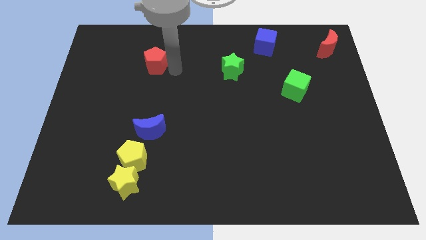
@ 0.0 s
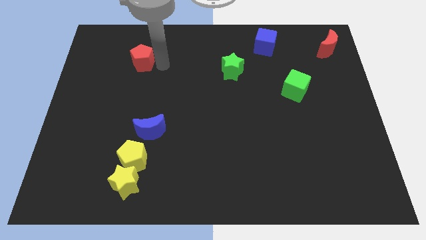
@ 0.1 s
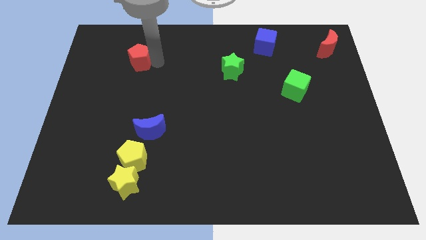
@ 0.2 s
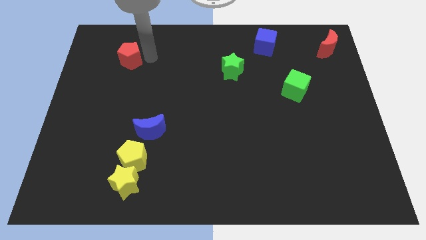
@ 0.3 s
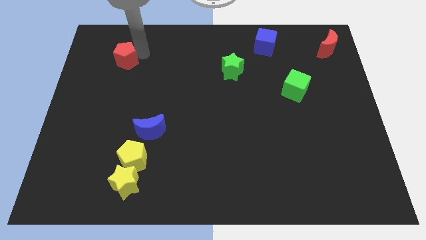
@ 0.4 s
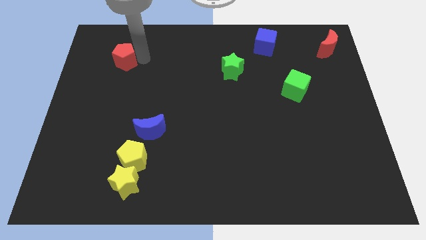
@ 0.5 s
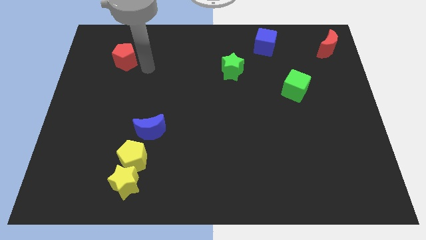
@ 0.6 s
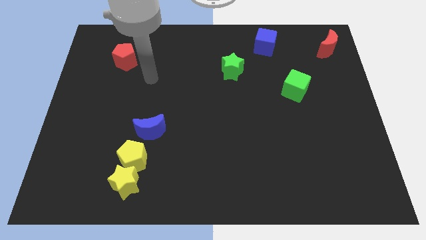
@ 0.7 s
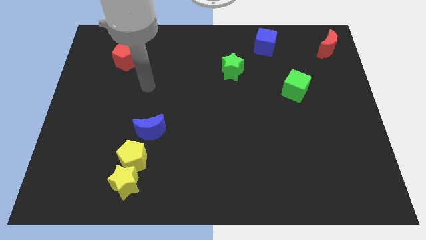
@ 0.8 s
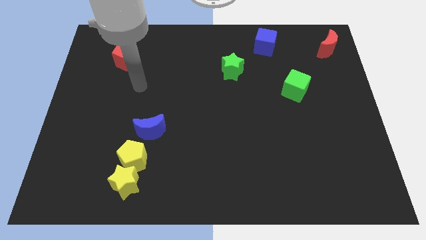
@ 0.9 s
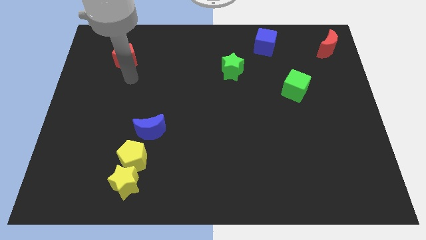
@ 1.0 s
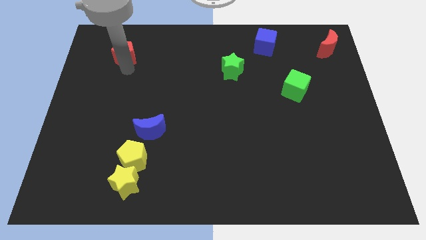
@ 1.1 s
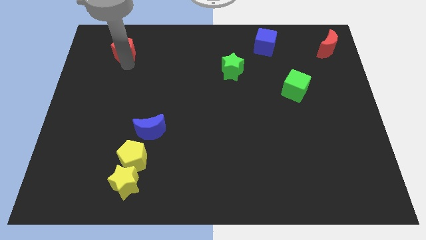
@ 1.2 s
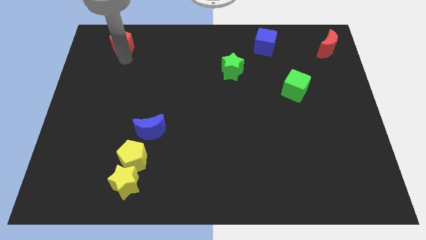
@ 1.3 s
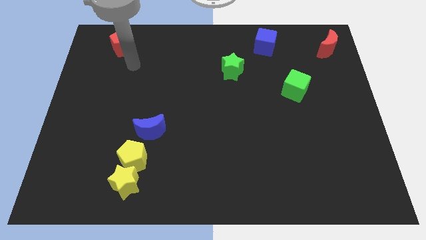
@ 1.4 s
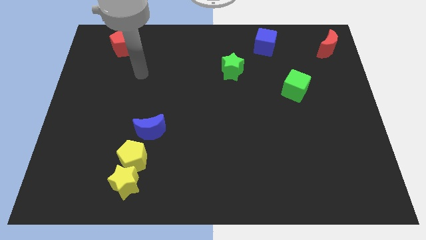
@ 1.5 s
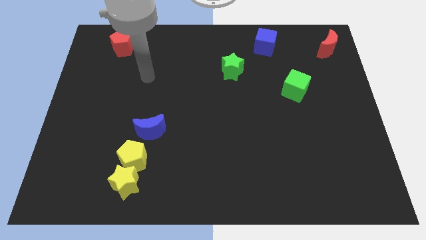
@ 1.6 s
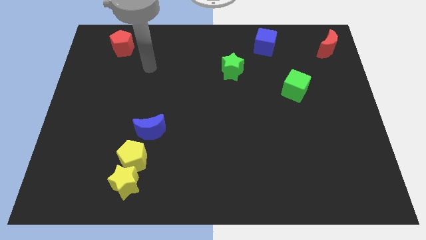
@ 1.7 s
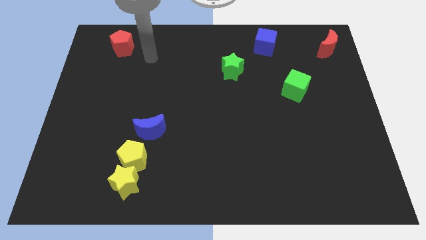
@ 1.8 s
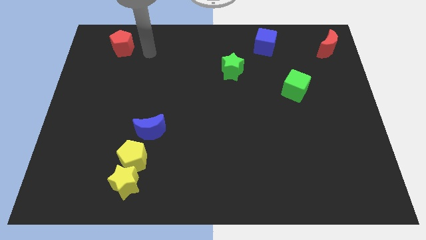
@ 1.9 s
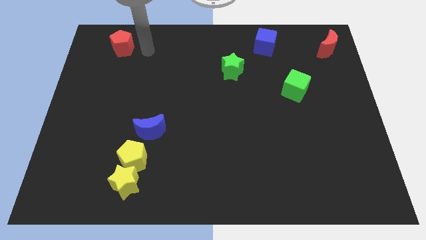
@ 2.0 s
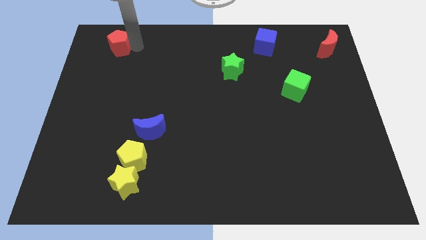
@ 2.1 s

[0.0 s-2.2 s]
move the red pentagon at the top left corner

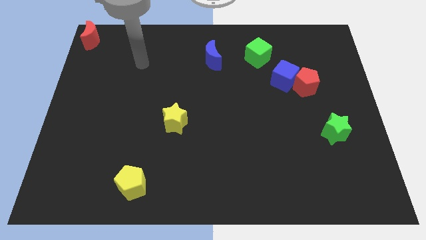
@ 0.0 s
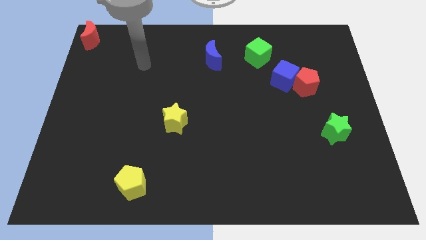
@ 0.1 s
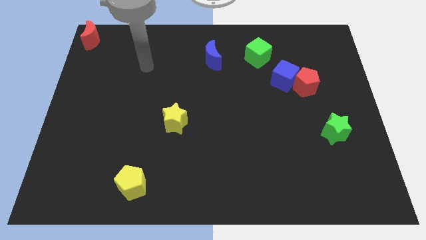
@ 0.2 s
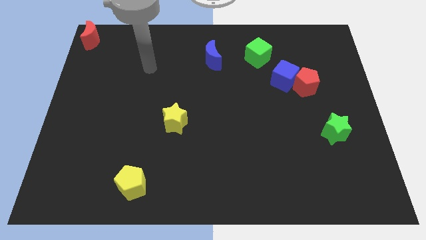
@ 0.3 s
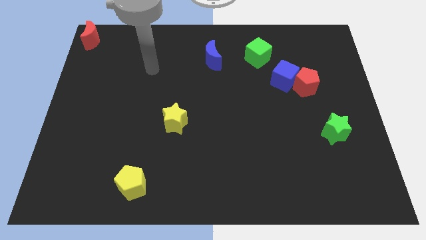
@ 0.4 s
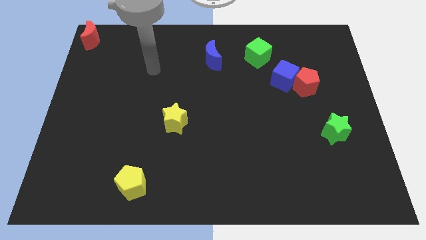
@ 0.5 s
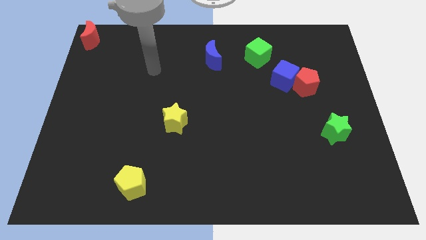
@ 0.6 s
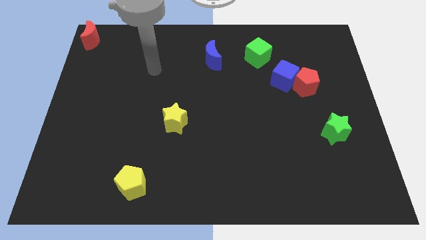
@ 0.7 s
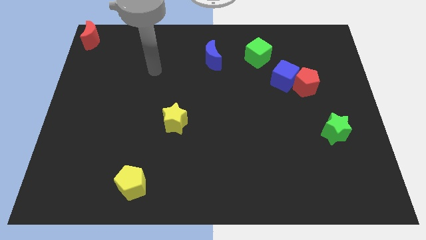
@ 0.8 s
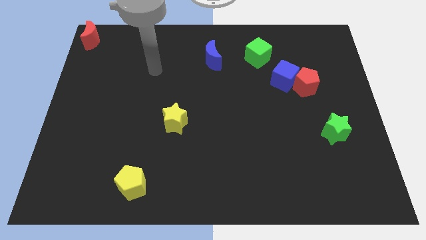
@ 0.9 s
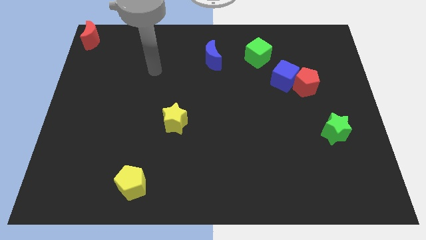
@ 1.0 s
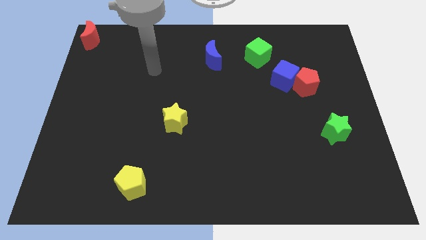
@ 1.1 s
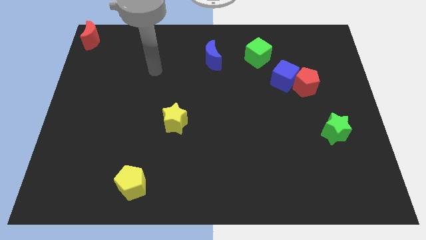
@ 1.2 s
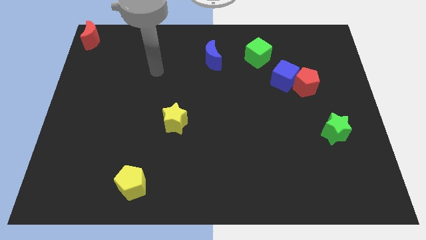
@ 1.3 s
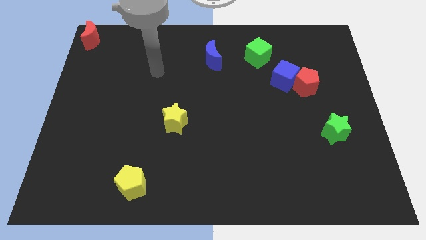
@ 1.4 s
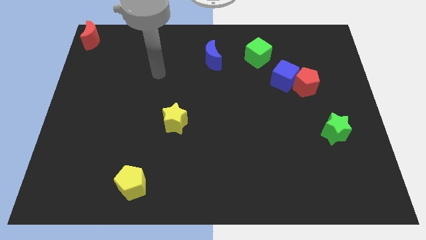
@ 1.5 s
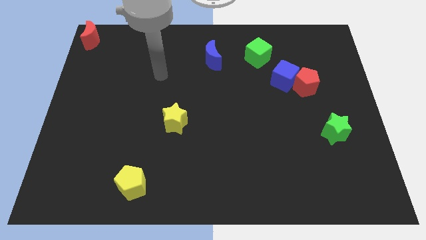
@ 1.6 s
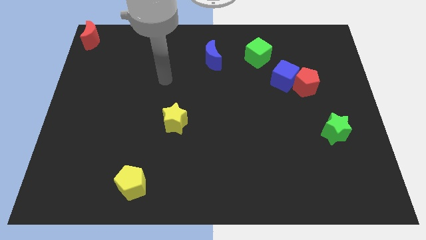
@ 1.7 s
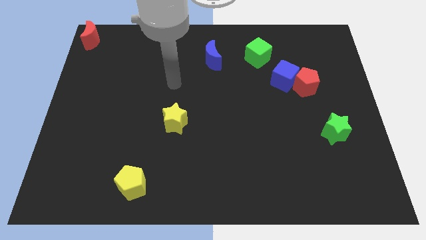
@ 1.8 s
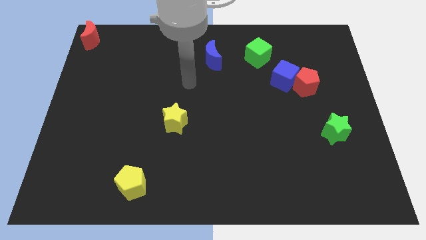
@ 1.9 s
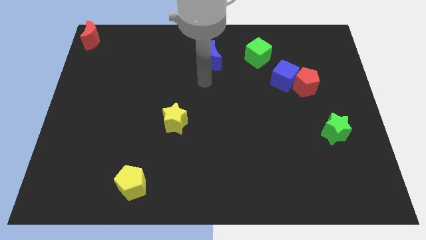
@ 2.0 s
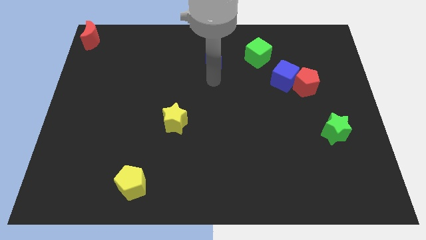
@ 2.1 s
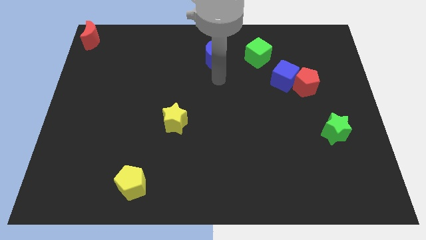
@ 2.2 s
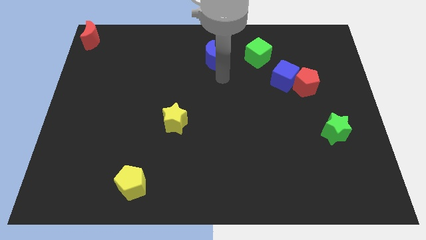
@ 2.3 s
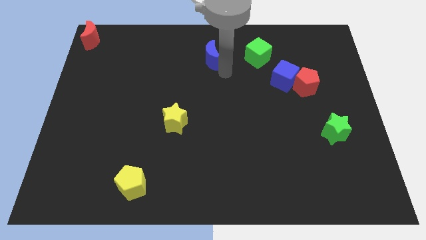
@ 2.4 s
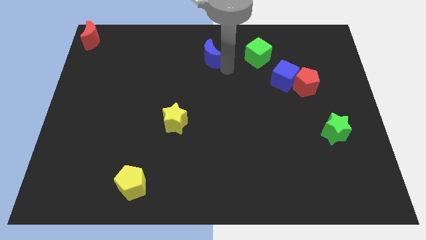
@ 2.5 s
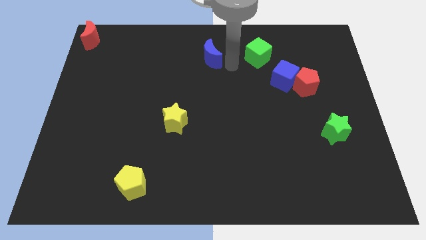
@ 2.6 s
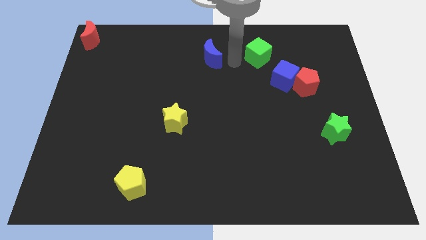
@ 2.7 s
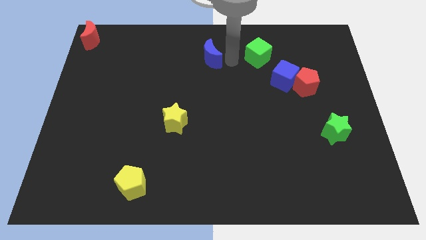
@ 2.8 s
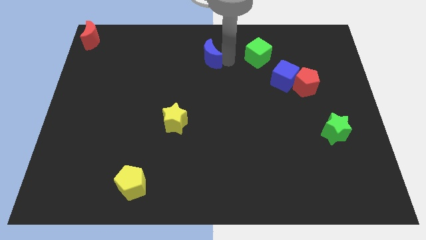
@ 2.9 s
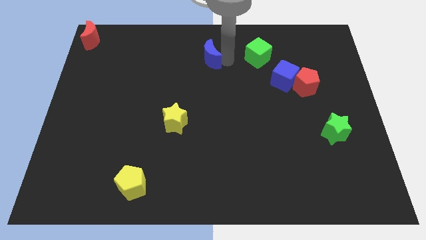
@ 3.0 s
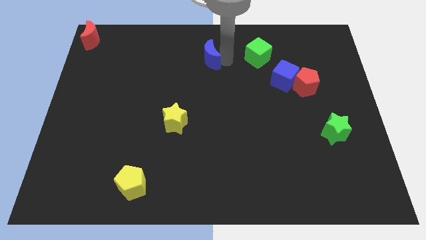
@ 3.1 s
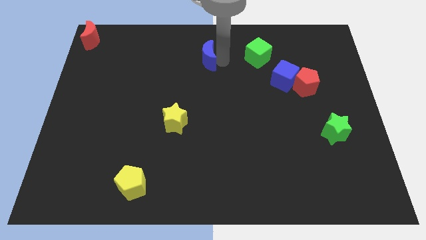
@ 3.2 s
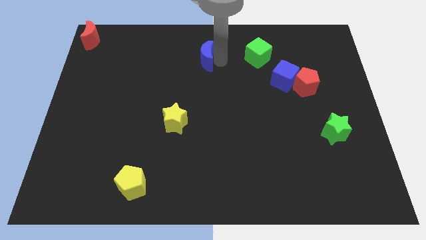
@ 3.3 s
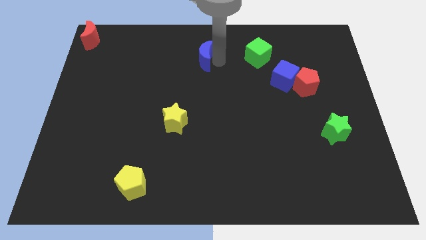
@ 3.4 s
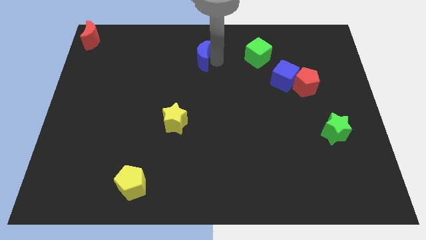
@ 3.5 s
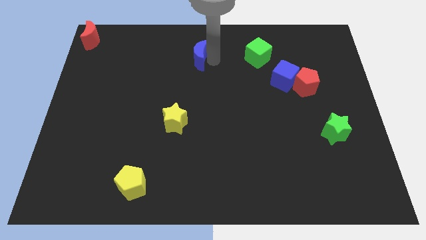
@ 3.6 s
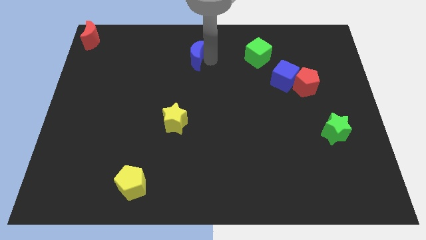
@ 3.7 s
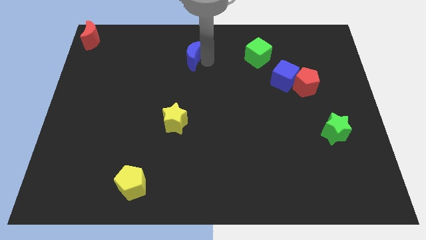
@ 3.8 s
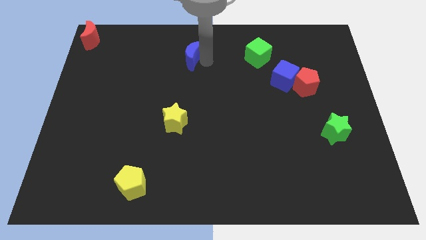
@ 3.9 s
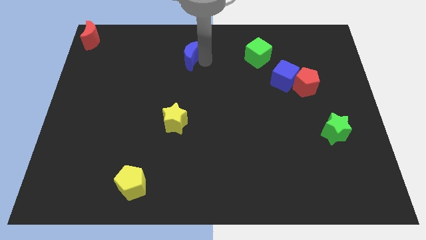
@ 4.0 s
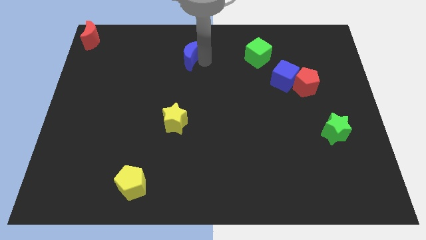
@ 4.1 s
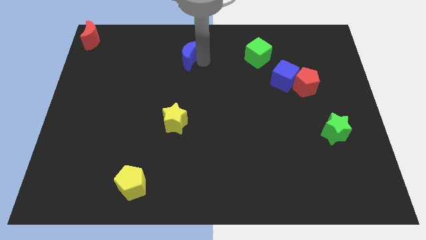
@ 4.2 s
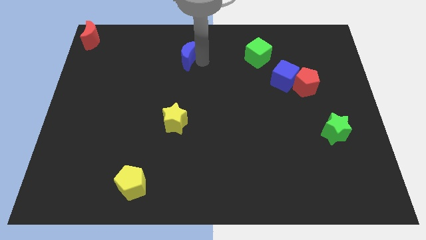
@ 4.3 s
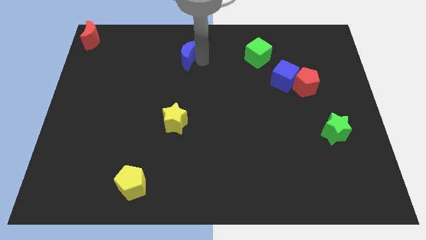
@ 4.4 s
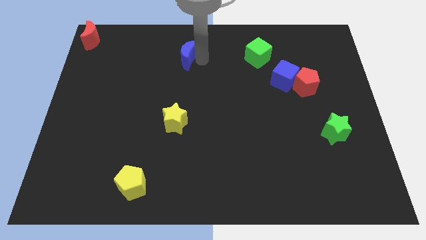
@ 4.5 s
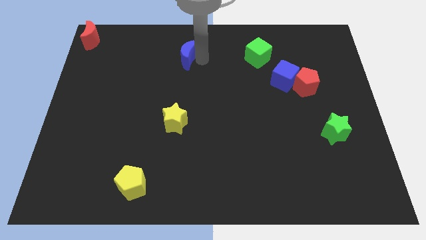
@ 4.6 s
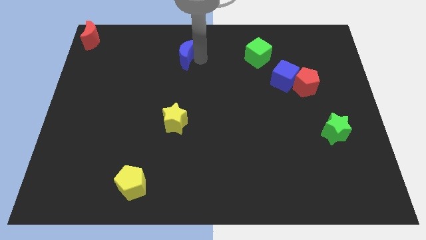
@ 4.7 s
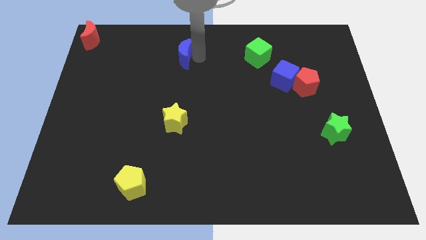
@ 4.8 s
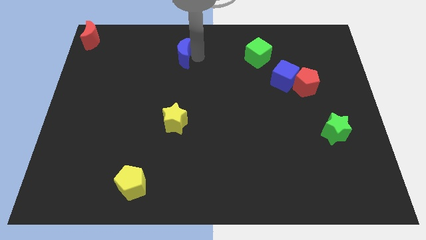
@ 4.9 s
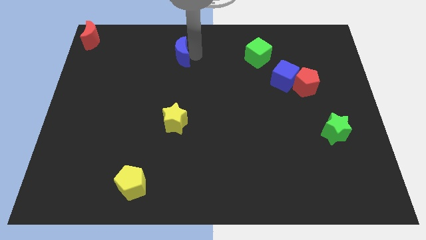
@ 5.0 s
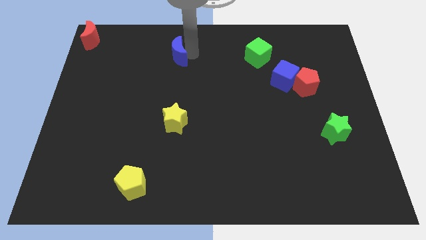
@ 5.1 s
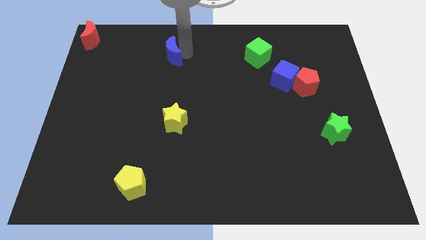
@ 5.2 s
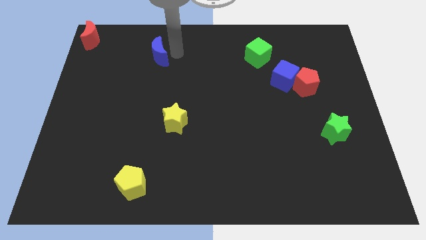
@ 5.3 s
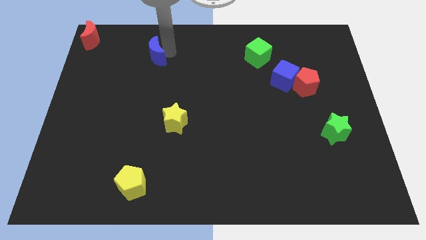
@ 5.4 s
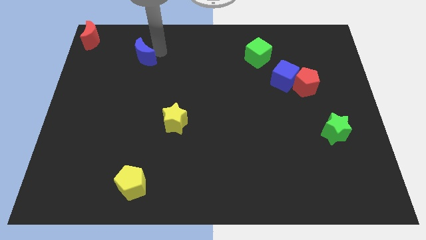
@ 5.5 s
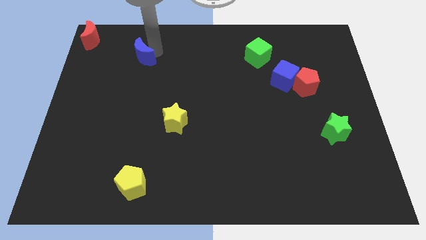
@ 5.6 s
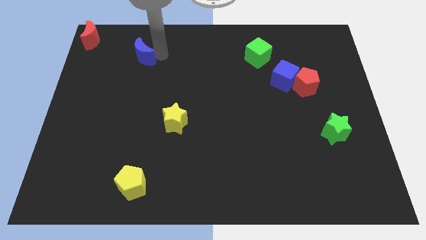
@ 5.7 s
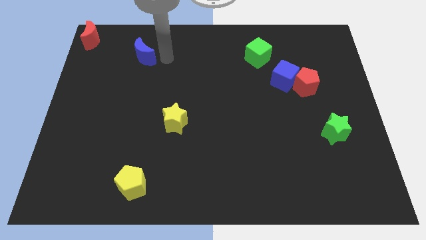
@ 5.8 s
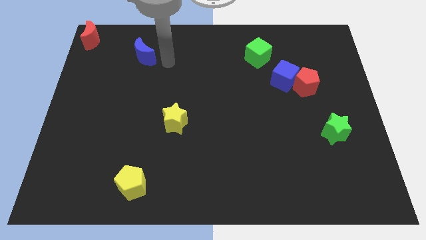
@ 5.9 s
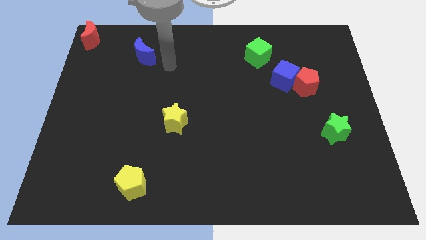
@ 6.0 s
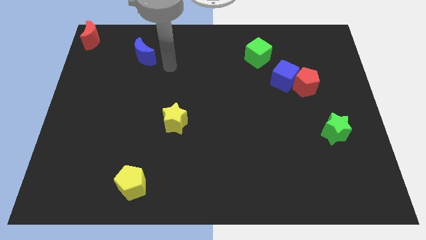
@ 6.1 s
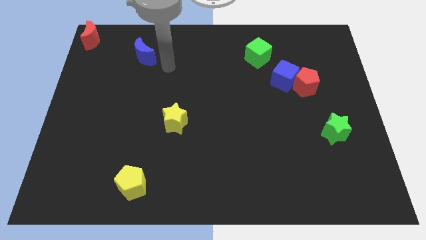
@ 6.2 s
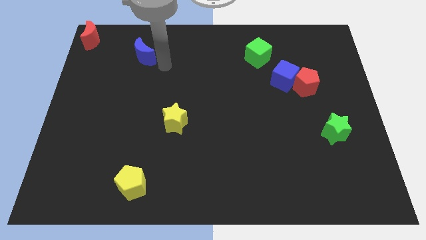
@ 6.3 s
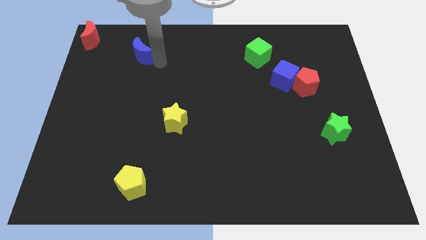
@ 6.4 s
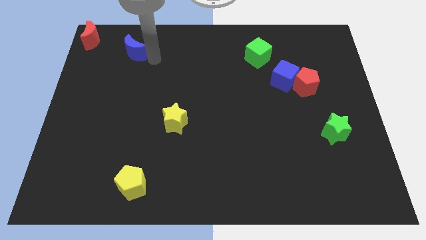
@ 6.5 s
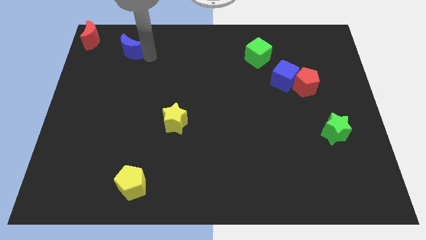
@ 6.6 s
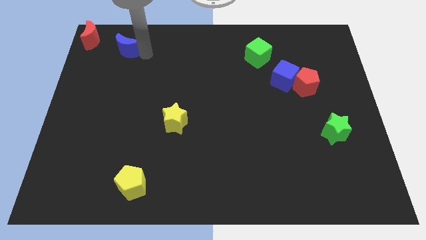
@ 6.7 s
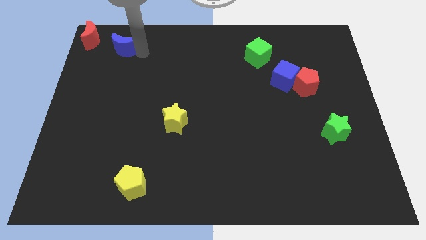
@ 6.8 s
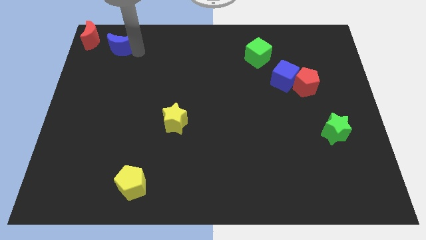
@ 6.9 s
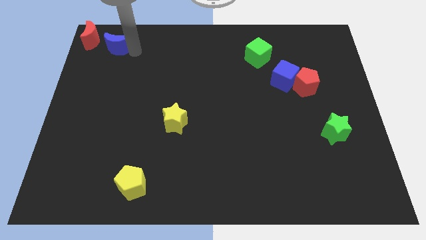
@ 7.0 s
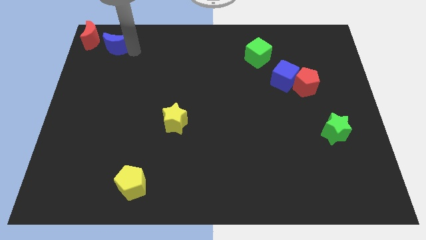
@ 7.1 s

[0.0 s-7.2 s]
slide the blue semicircle towards the red crescent
